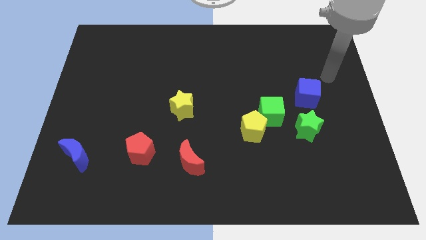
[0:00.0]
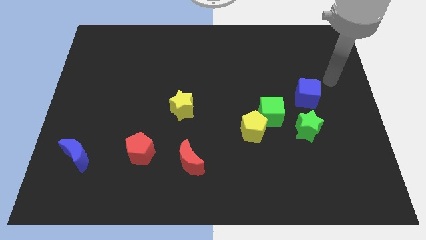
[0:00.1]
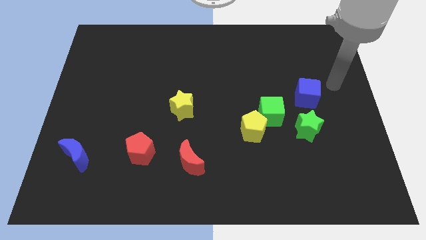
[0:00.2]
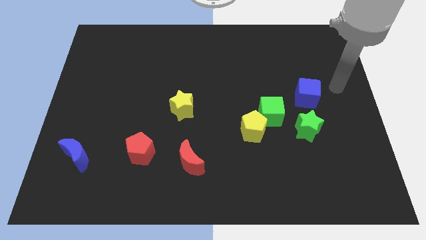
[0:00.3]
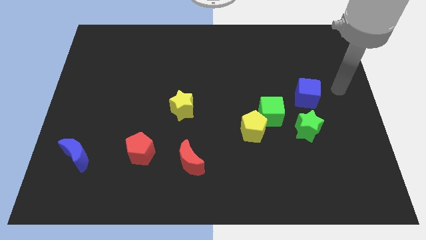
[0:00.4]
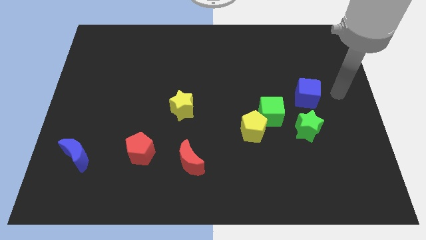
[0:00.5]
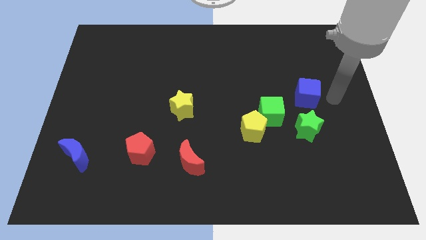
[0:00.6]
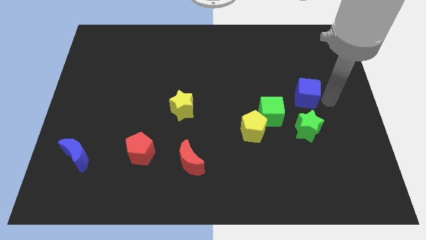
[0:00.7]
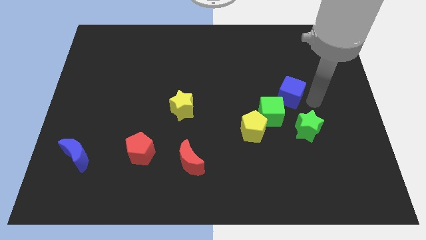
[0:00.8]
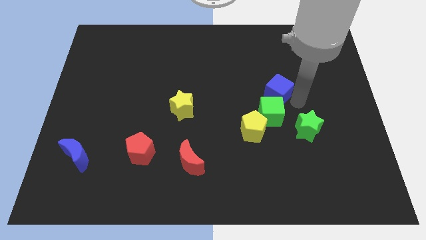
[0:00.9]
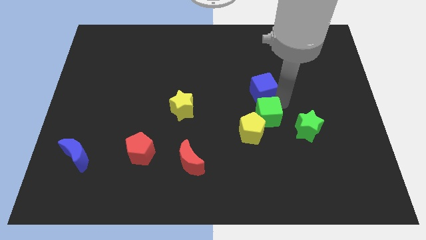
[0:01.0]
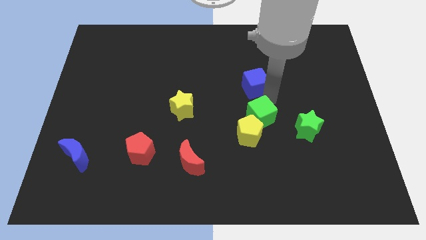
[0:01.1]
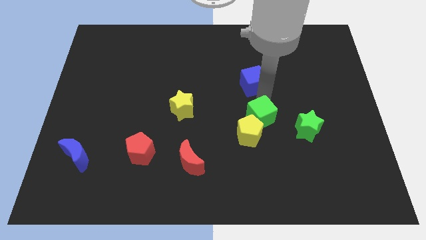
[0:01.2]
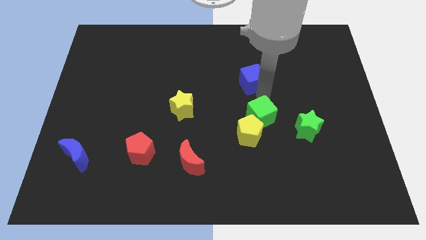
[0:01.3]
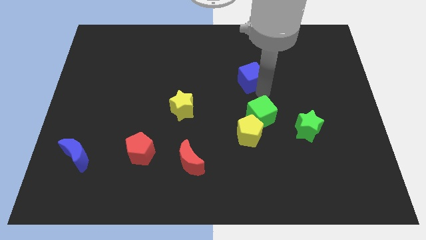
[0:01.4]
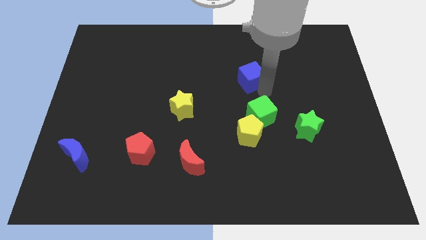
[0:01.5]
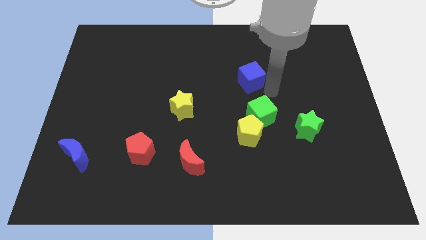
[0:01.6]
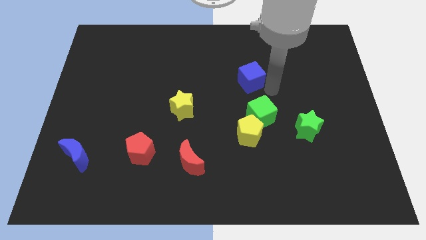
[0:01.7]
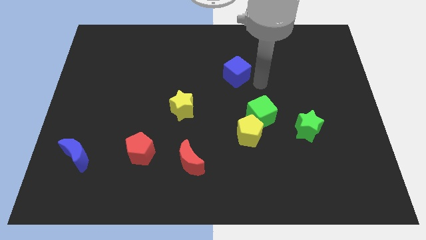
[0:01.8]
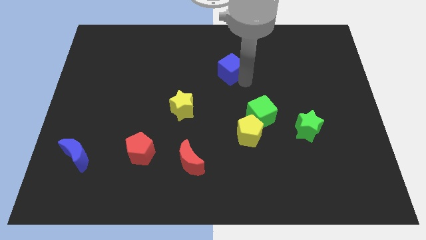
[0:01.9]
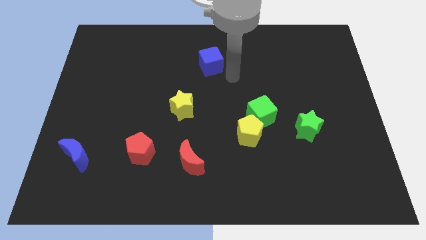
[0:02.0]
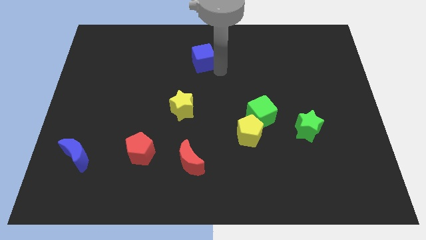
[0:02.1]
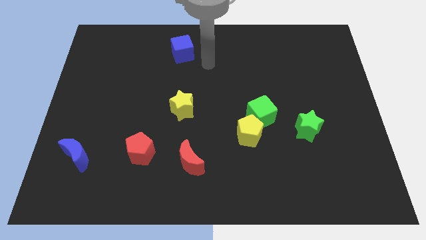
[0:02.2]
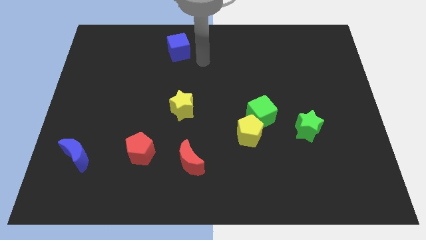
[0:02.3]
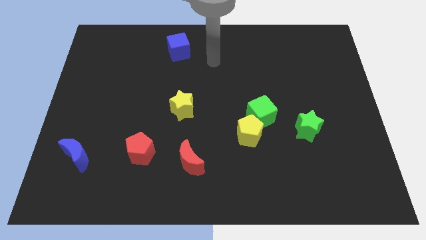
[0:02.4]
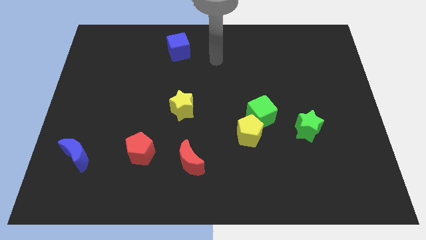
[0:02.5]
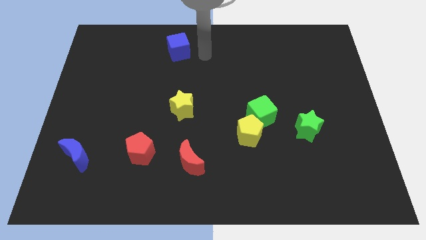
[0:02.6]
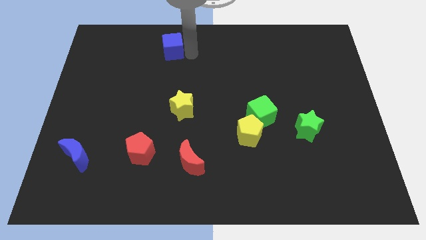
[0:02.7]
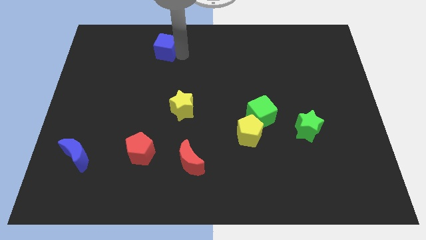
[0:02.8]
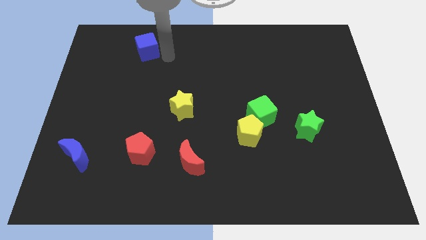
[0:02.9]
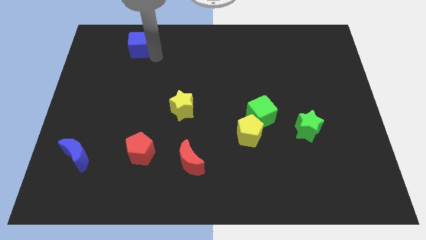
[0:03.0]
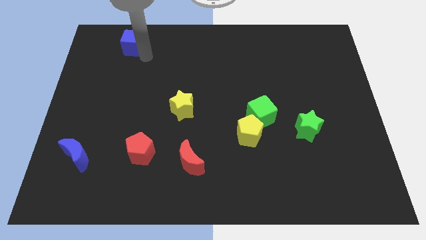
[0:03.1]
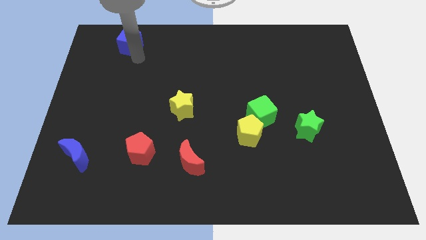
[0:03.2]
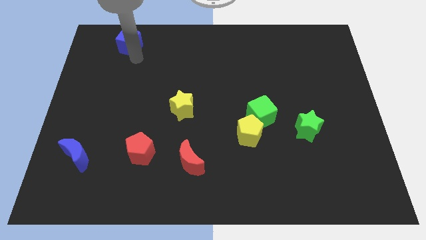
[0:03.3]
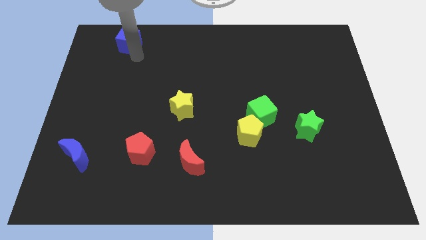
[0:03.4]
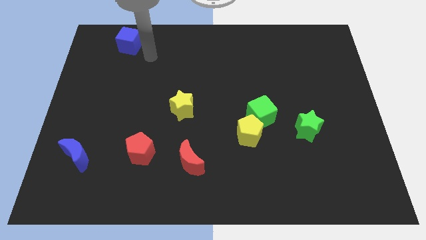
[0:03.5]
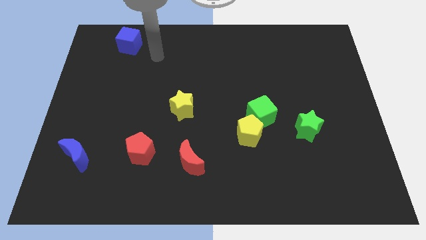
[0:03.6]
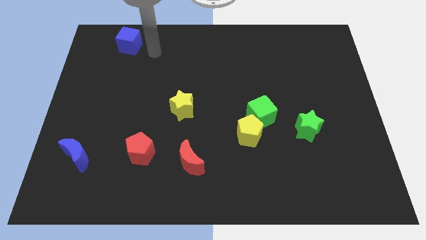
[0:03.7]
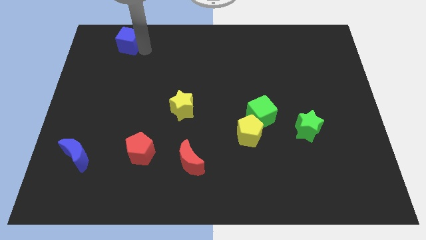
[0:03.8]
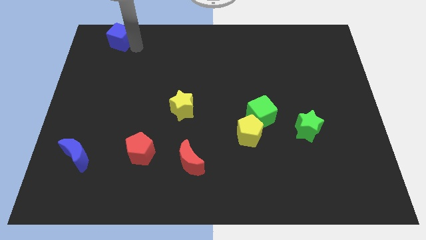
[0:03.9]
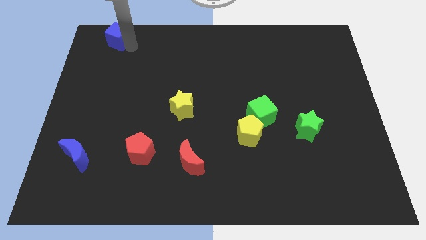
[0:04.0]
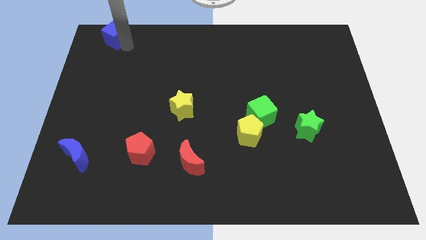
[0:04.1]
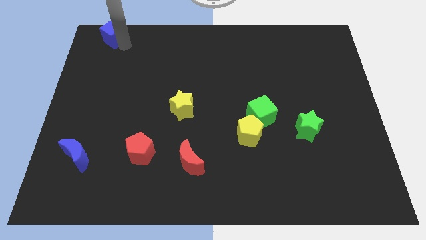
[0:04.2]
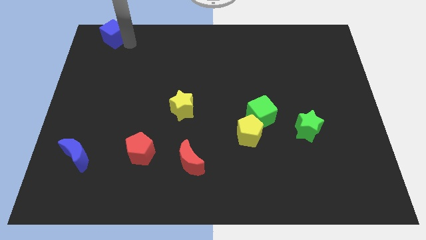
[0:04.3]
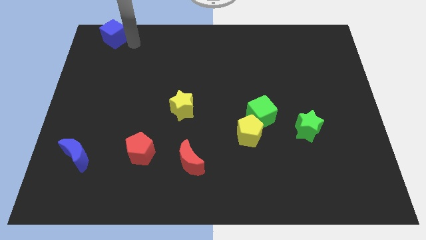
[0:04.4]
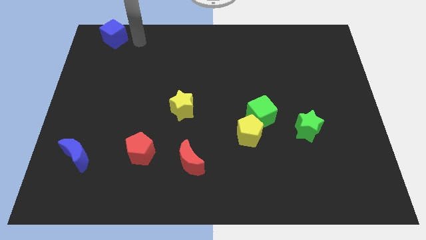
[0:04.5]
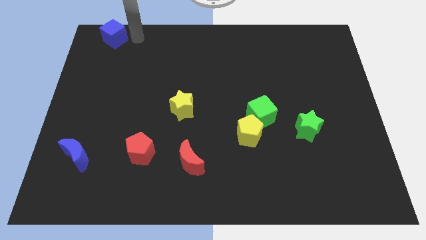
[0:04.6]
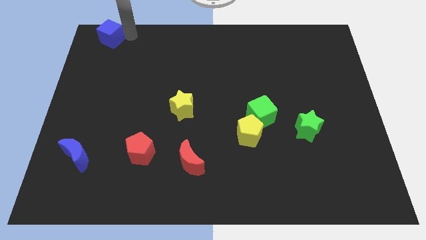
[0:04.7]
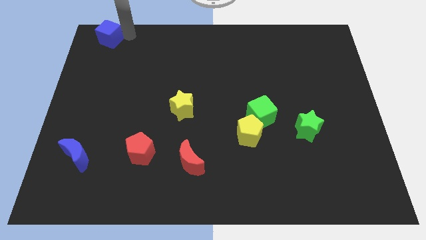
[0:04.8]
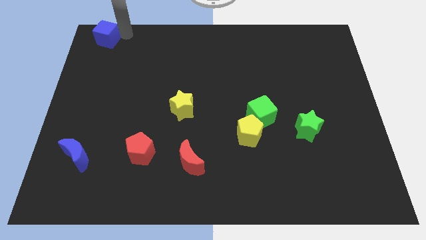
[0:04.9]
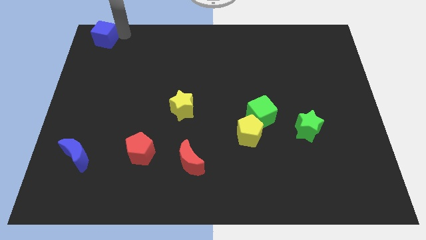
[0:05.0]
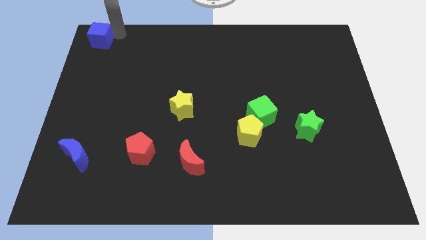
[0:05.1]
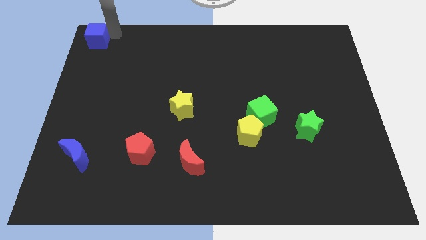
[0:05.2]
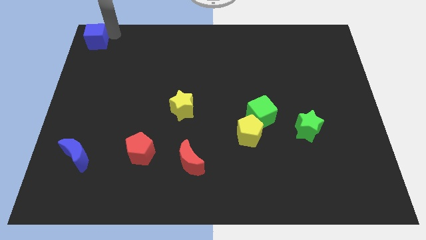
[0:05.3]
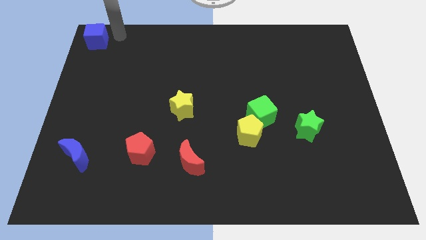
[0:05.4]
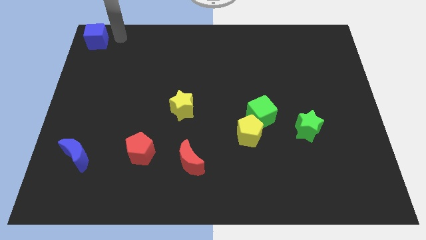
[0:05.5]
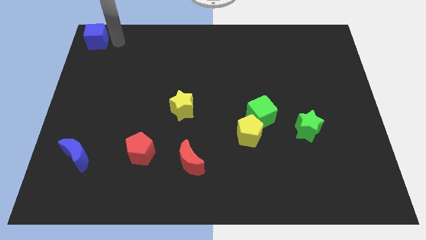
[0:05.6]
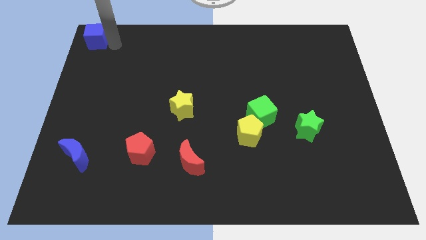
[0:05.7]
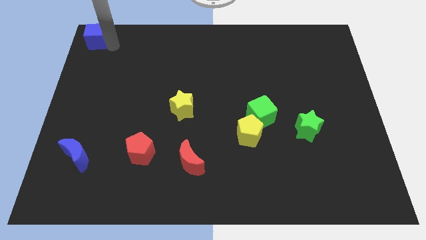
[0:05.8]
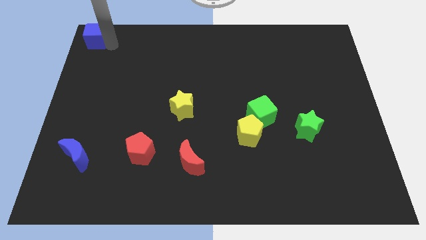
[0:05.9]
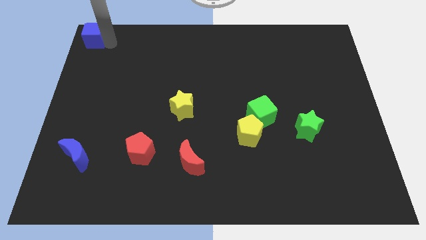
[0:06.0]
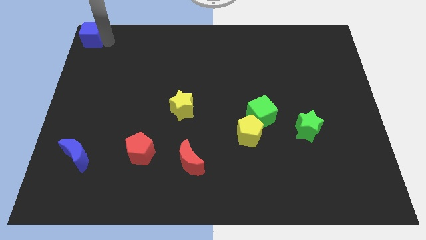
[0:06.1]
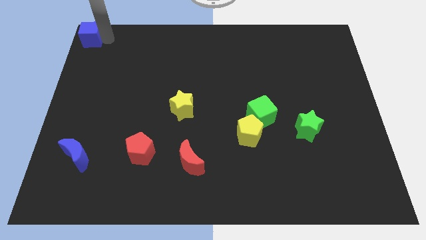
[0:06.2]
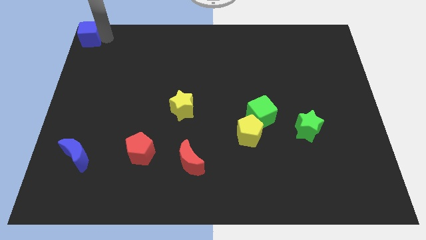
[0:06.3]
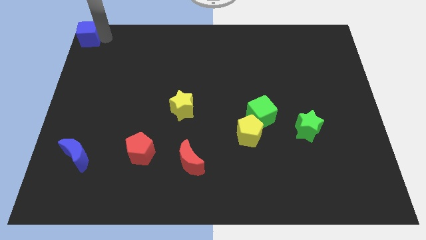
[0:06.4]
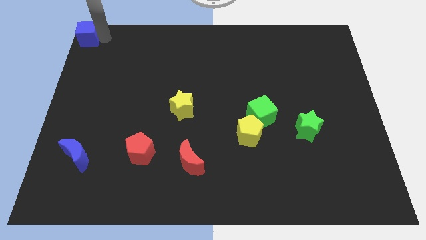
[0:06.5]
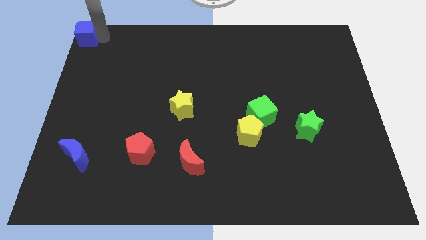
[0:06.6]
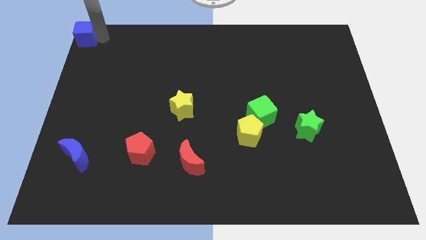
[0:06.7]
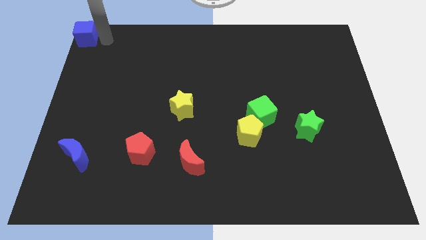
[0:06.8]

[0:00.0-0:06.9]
move blue cube to the top left corner of the board

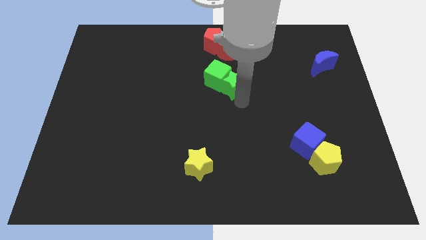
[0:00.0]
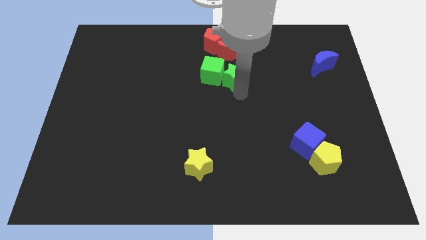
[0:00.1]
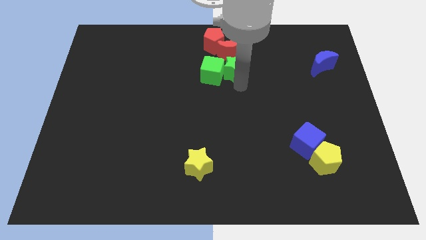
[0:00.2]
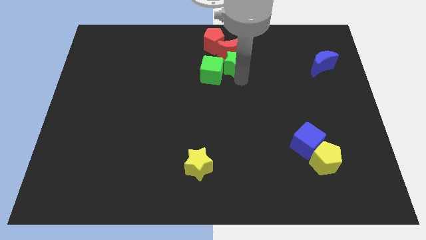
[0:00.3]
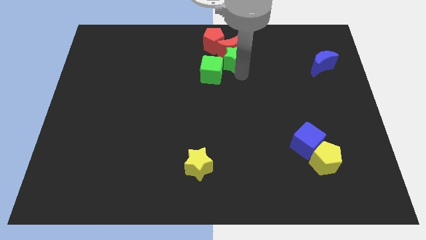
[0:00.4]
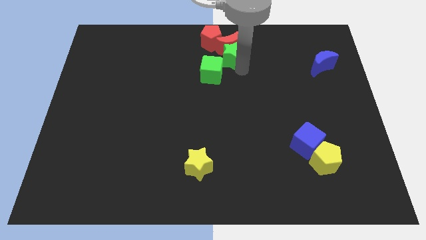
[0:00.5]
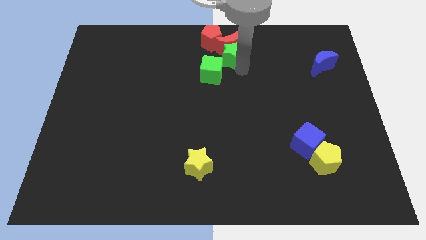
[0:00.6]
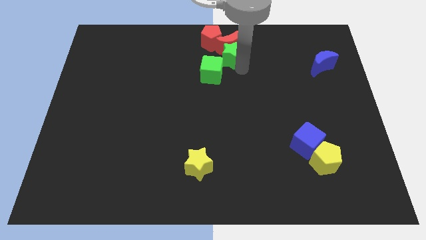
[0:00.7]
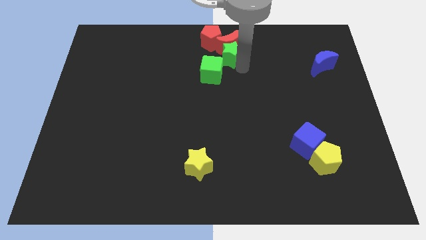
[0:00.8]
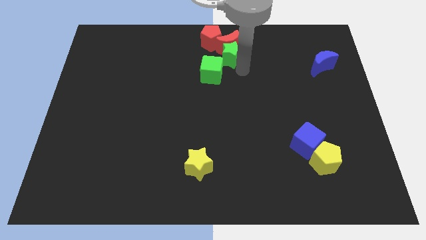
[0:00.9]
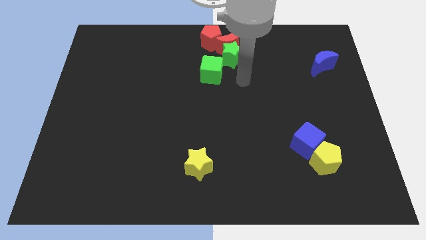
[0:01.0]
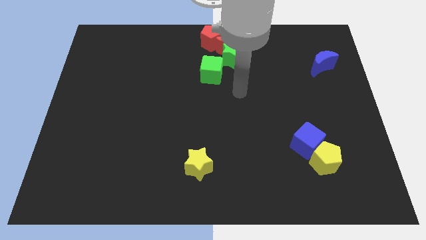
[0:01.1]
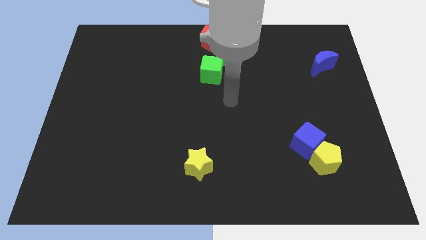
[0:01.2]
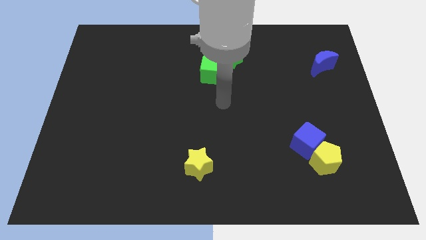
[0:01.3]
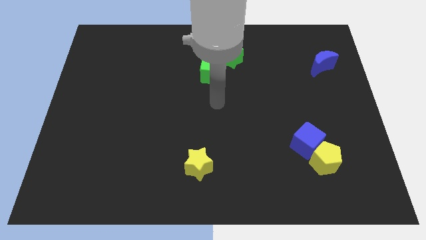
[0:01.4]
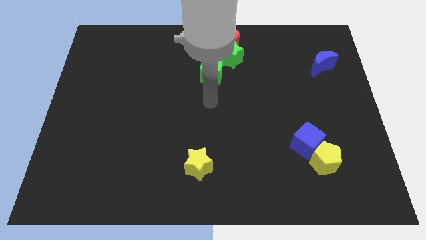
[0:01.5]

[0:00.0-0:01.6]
drag the green star diagonally top right to the green cube

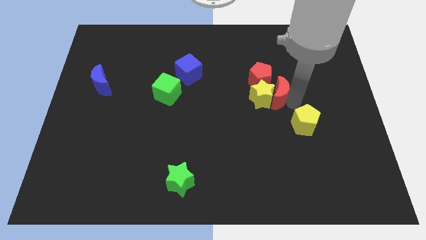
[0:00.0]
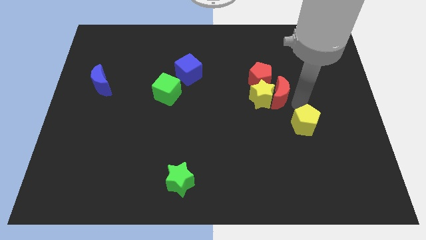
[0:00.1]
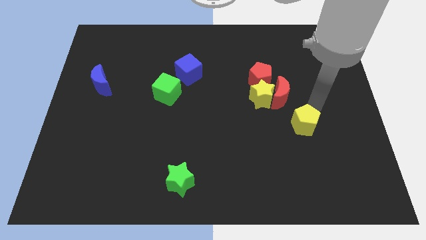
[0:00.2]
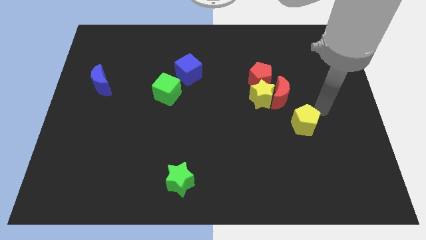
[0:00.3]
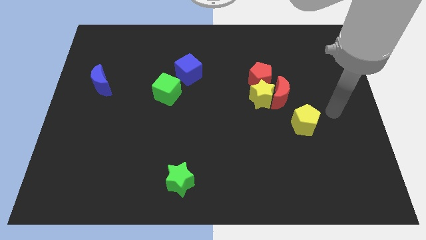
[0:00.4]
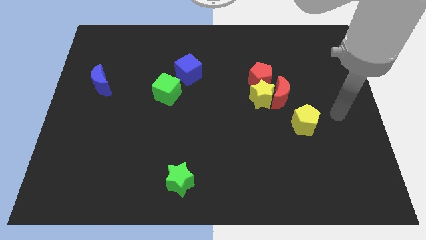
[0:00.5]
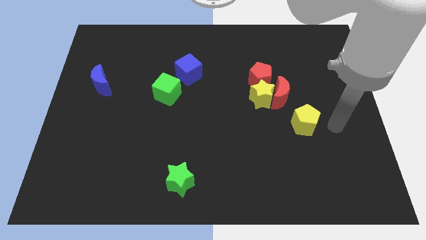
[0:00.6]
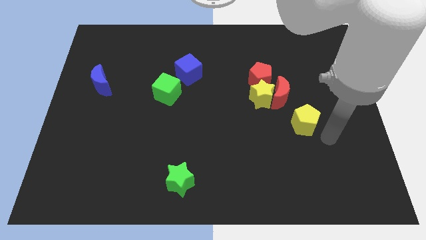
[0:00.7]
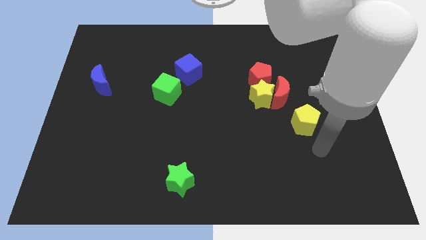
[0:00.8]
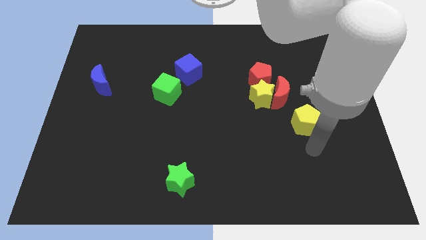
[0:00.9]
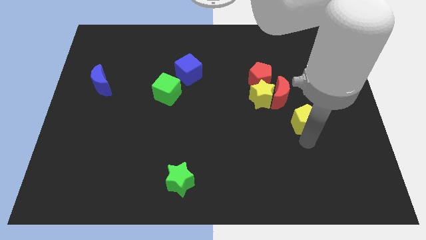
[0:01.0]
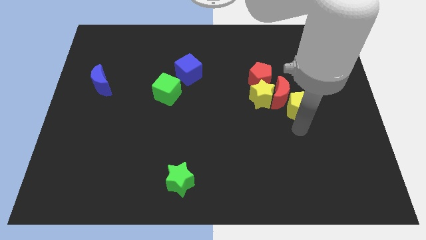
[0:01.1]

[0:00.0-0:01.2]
touch the bottom side of the yellow pentagon
